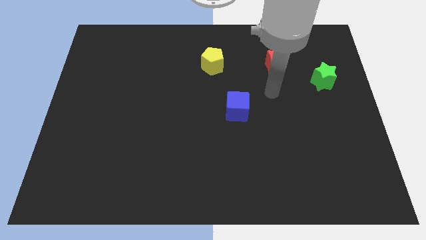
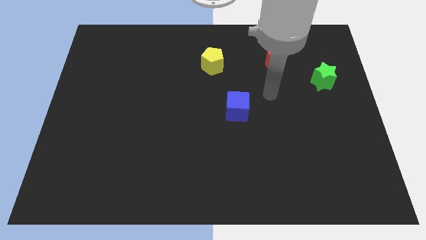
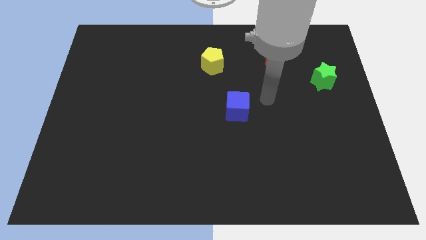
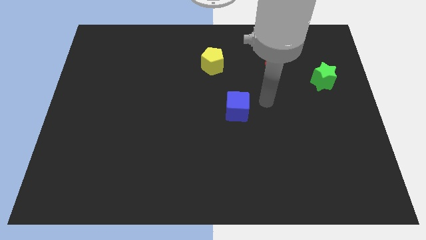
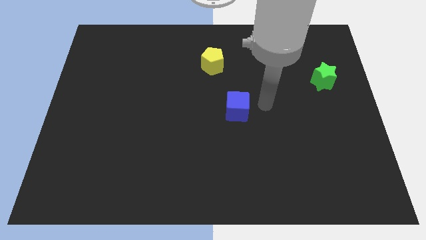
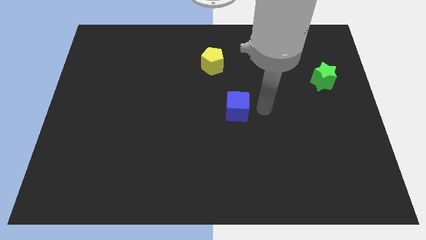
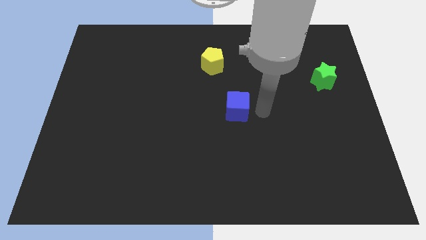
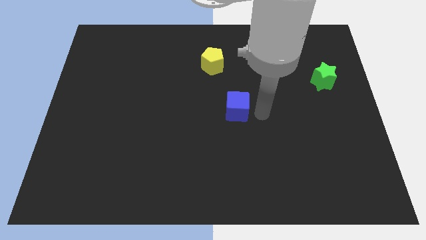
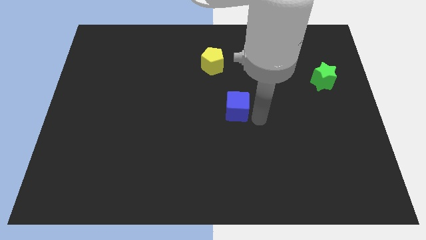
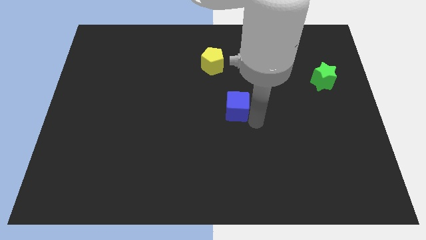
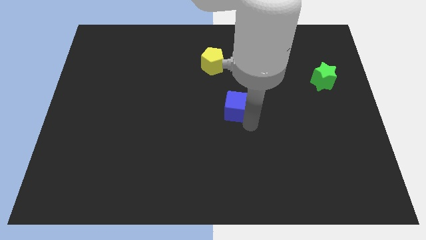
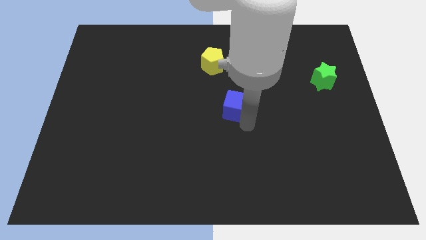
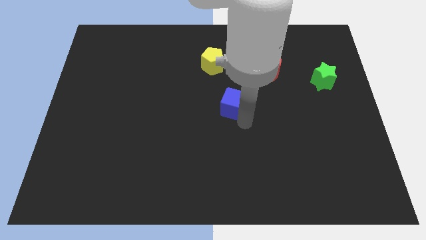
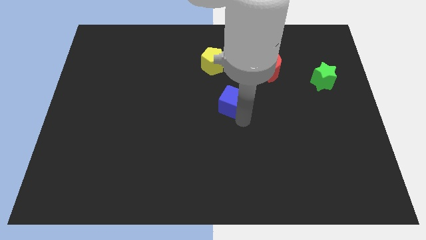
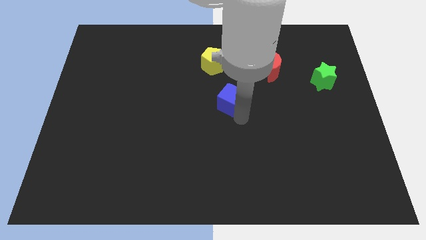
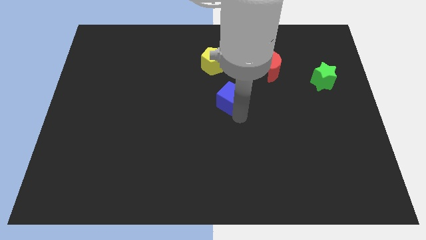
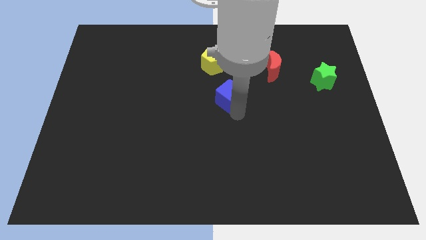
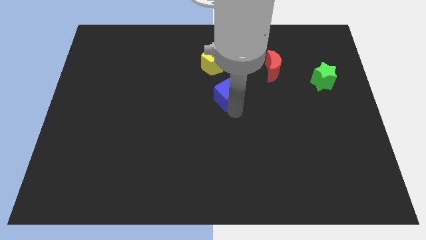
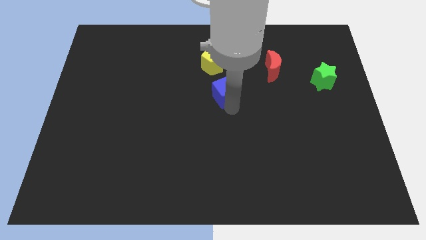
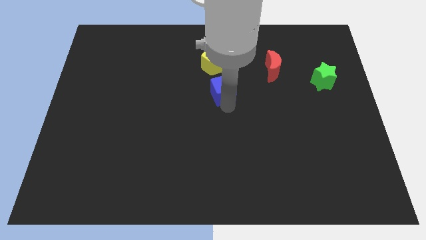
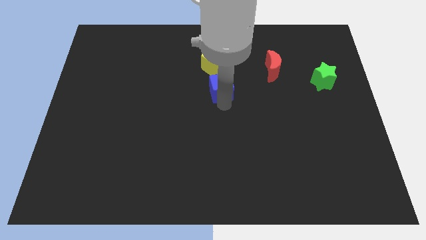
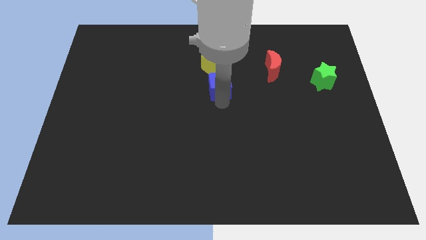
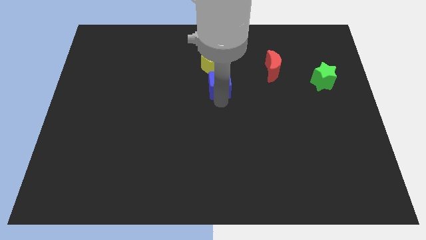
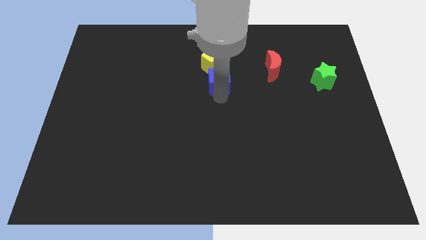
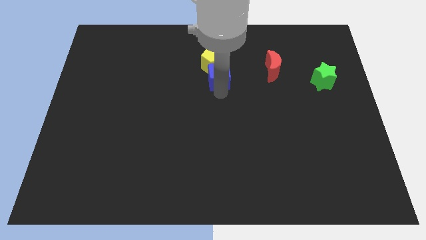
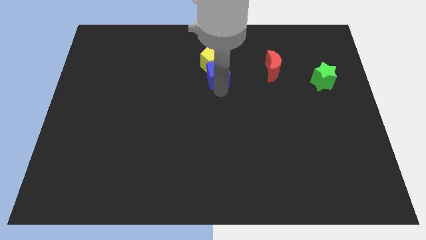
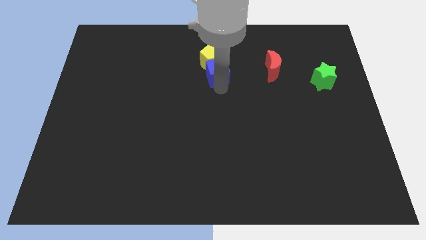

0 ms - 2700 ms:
push the cube close to the yellow pentagon

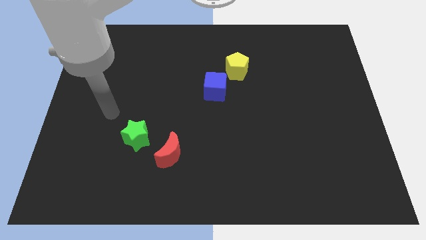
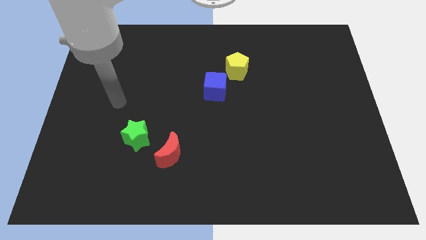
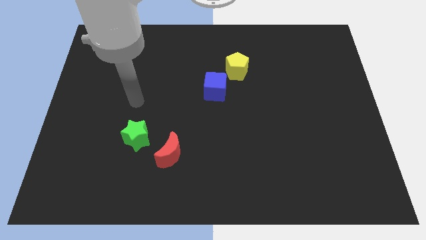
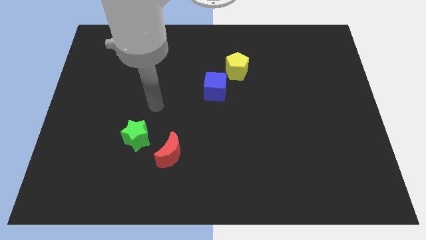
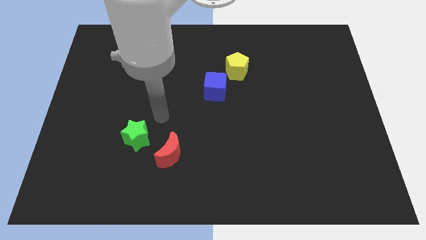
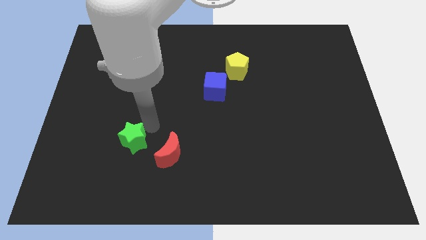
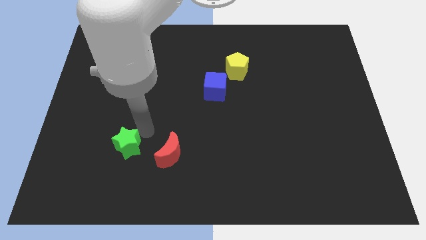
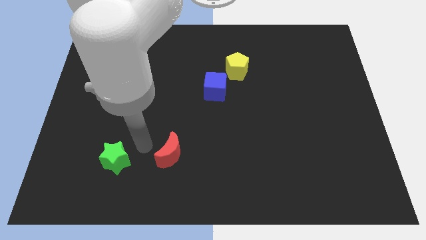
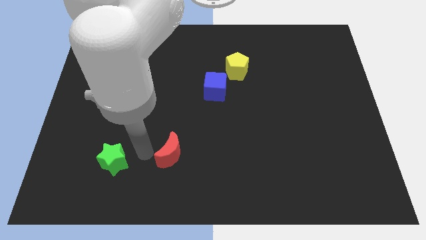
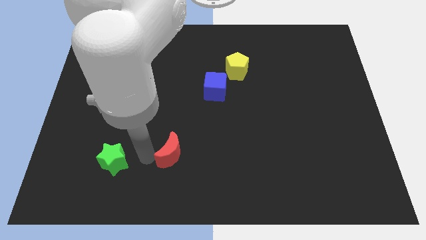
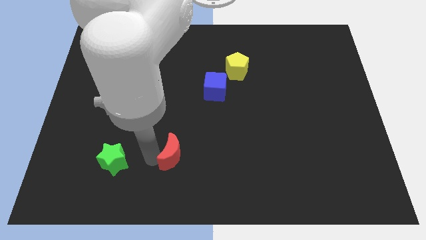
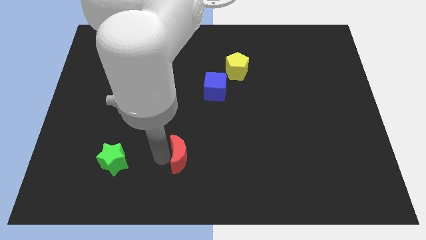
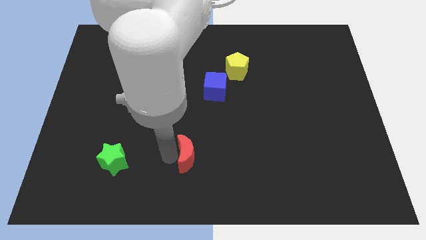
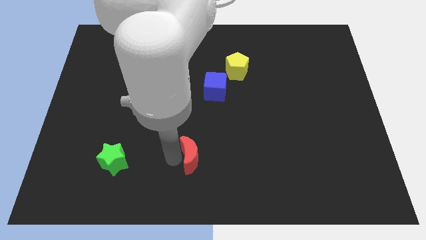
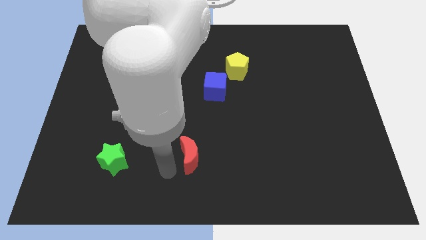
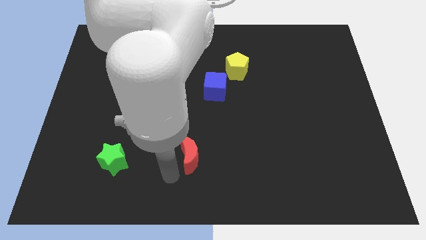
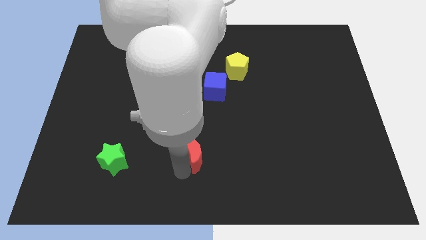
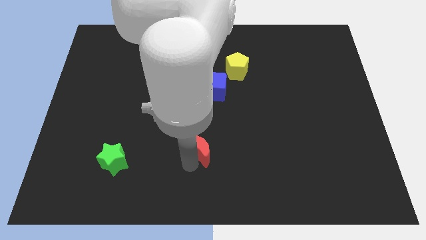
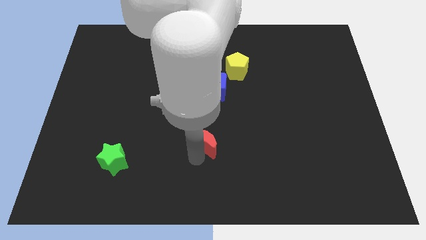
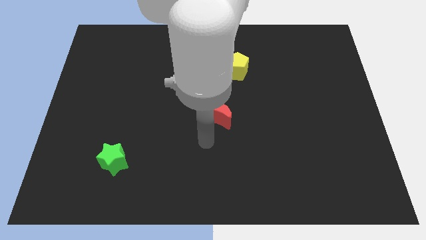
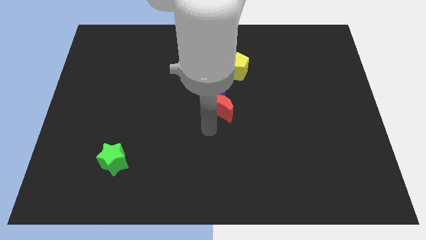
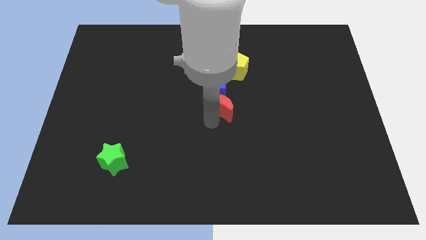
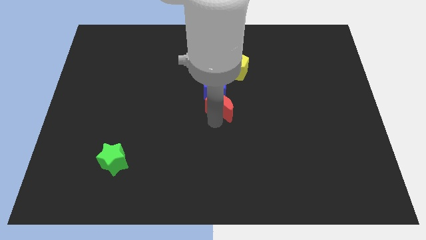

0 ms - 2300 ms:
slide the red moon to the blue block

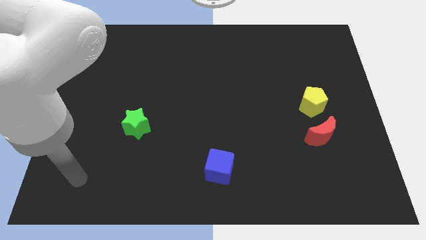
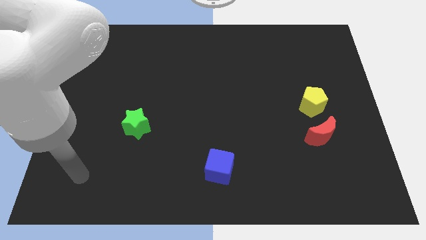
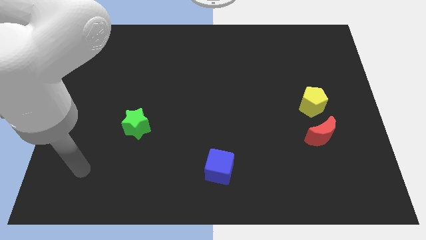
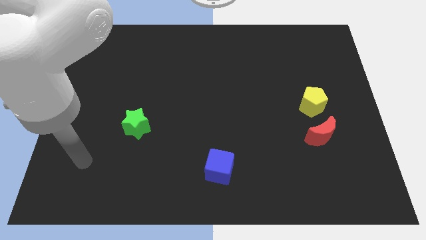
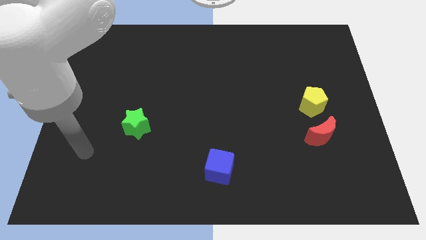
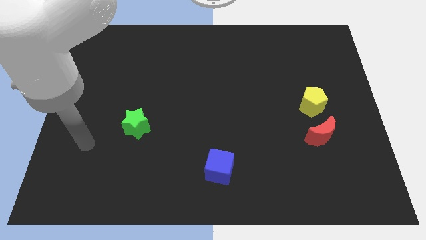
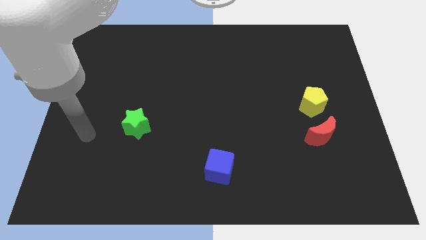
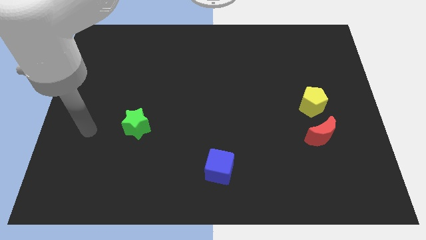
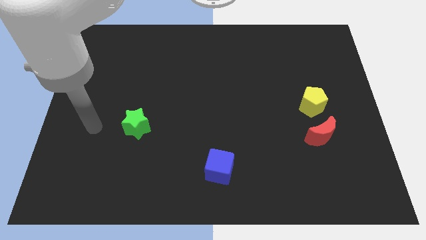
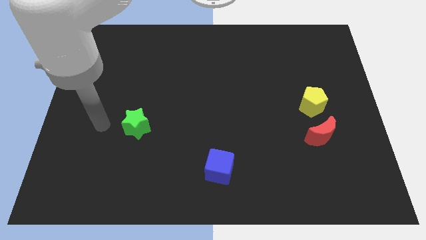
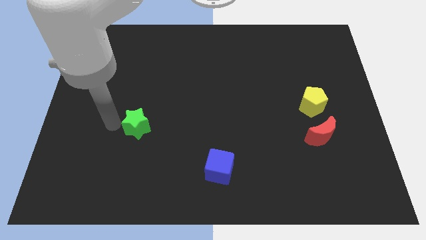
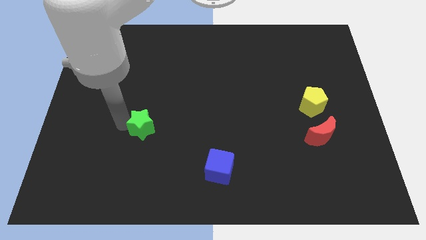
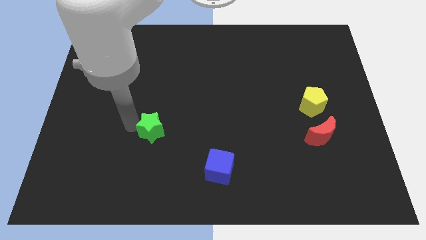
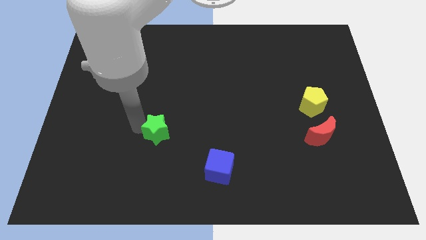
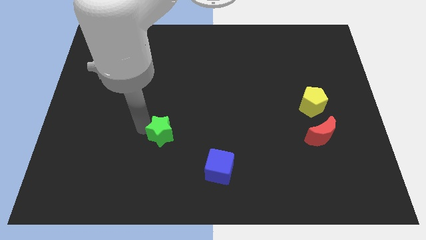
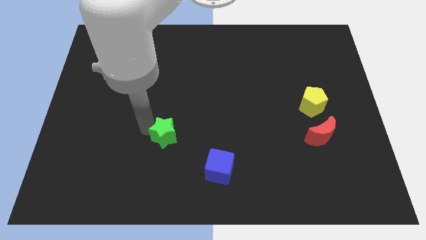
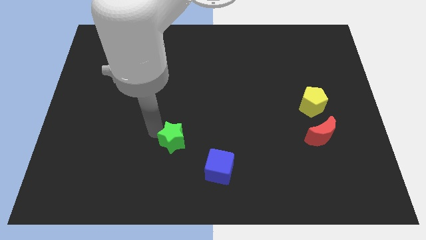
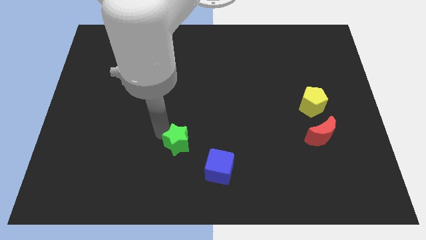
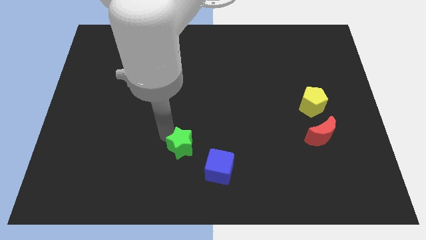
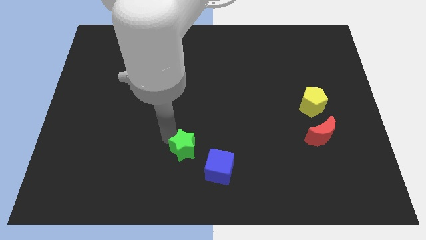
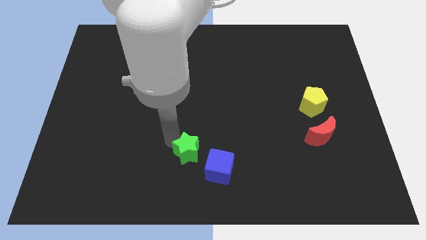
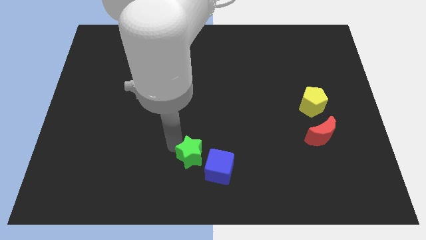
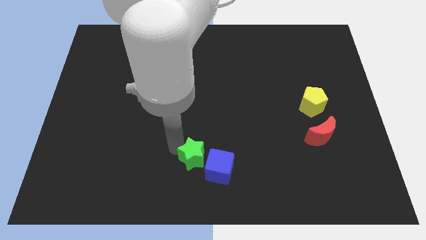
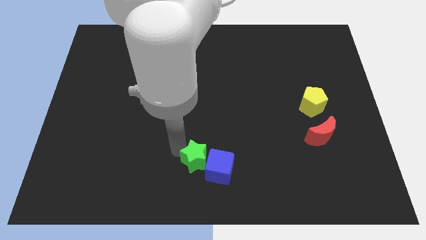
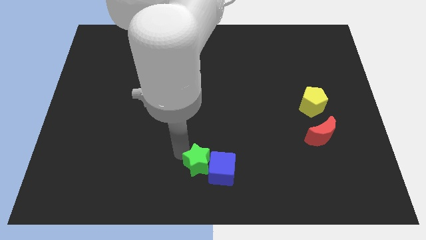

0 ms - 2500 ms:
move the green block to the blue cube

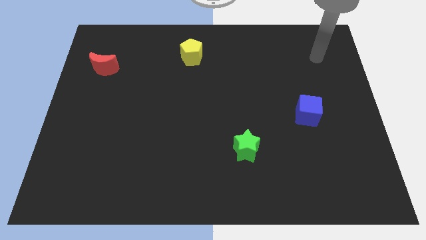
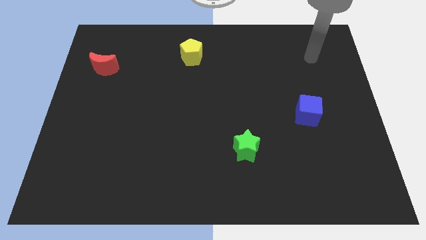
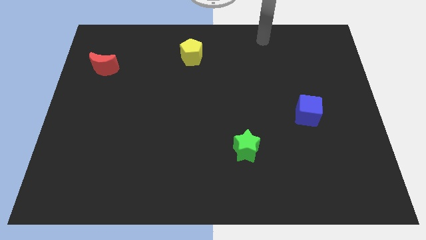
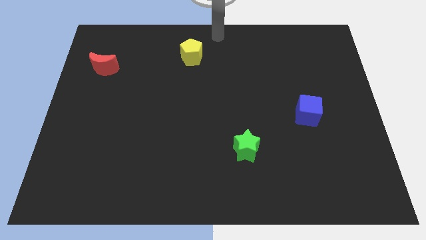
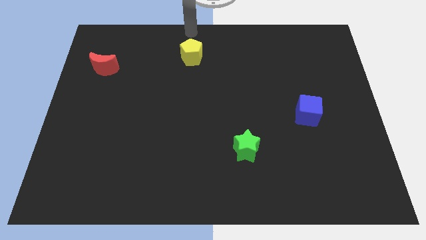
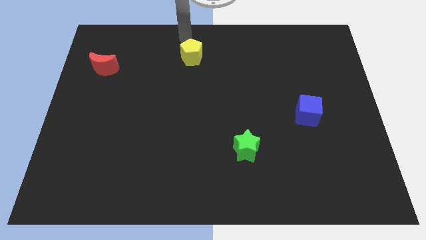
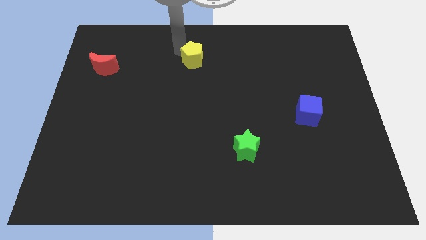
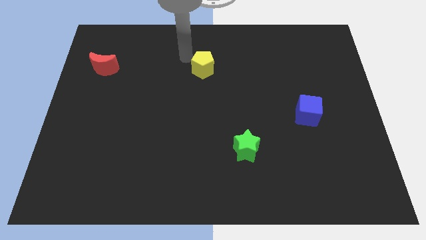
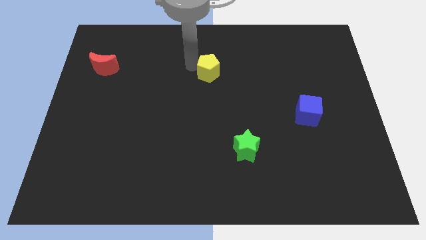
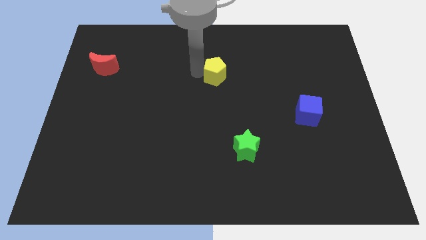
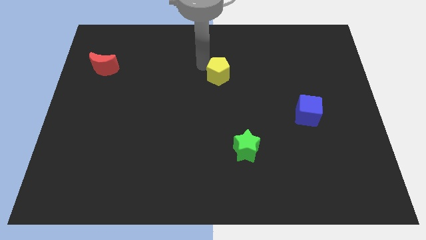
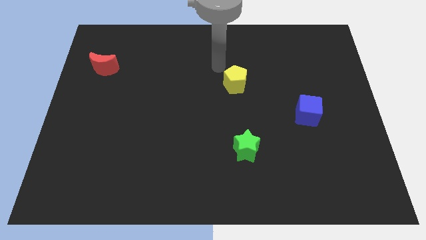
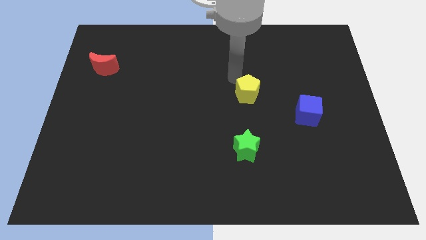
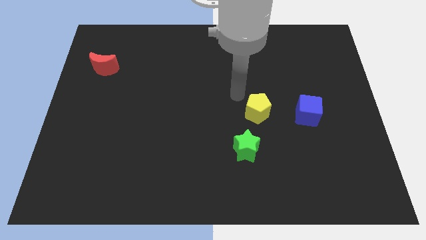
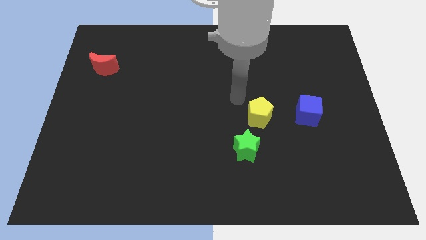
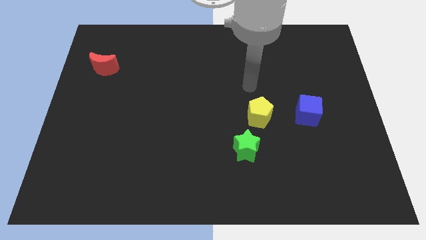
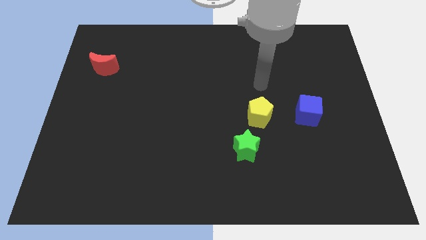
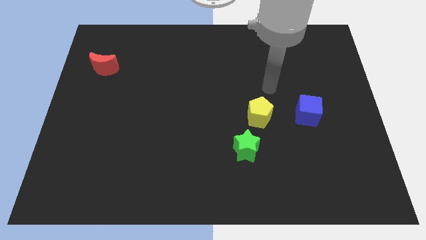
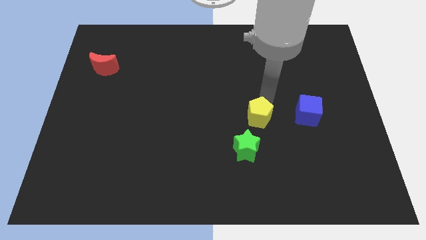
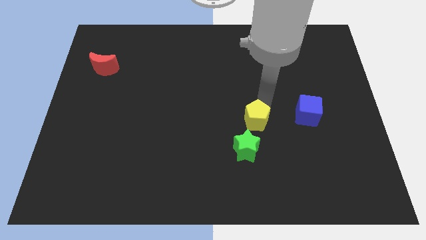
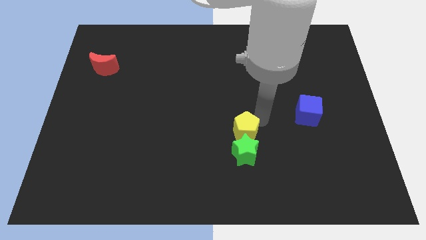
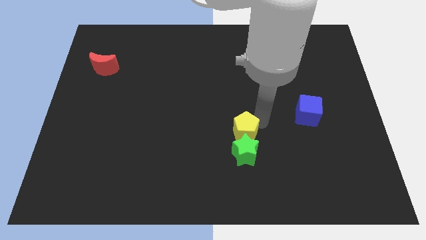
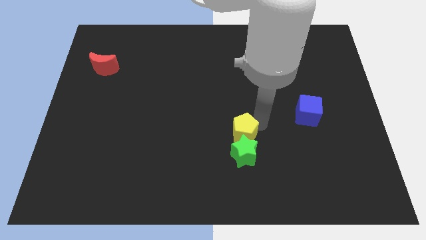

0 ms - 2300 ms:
push the yellow pentagon towards the star
